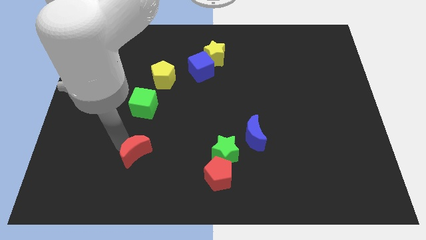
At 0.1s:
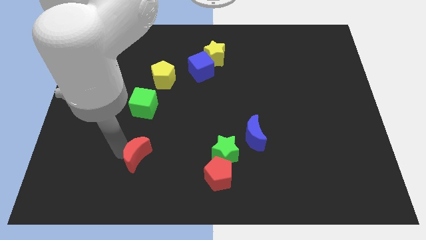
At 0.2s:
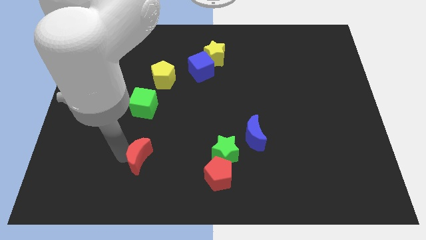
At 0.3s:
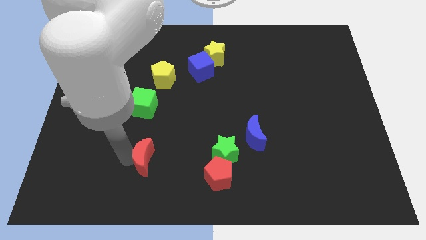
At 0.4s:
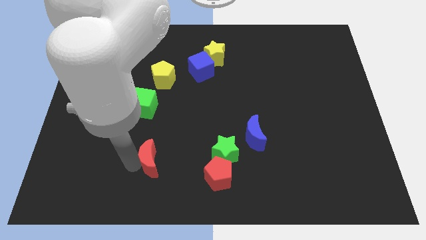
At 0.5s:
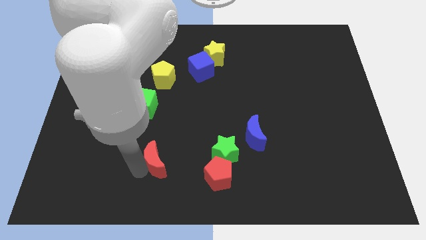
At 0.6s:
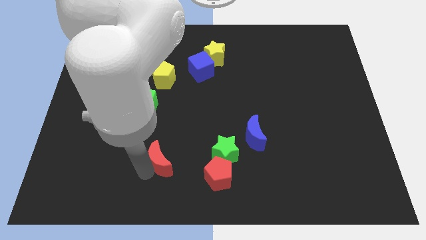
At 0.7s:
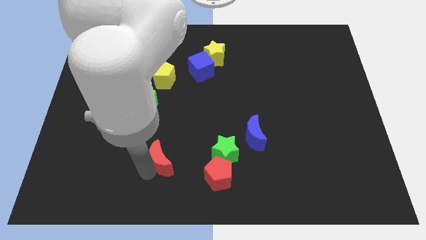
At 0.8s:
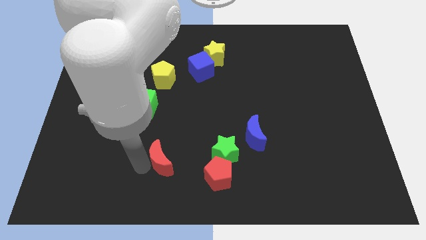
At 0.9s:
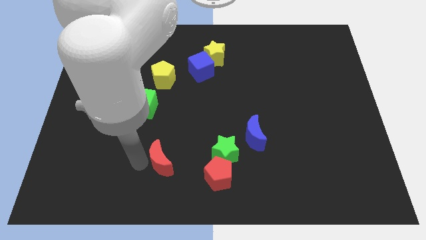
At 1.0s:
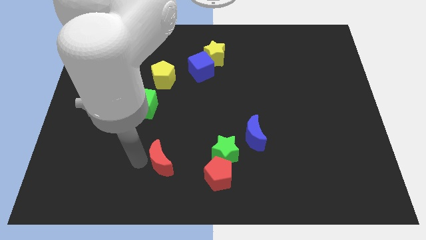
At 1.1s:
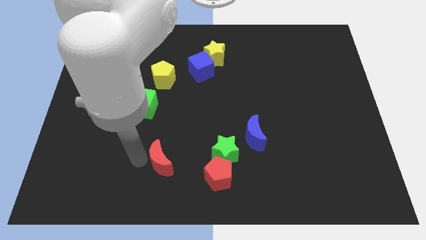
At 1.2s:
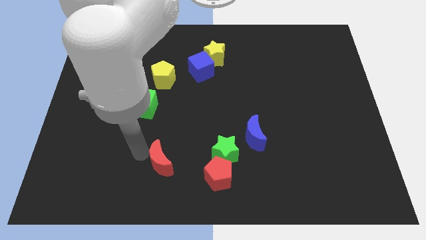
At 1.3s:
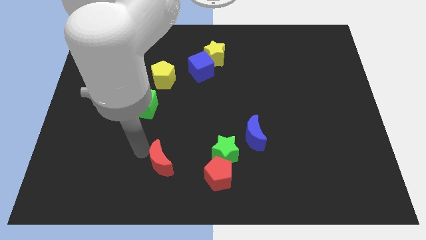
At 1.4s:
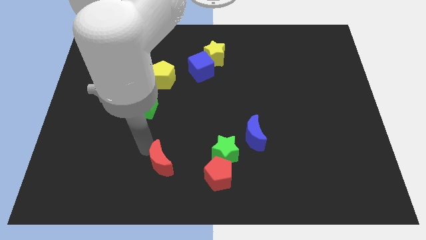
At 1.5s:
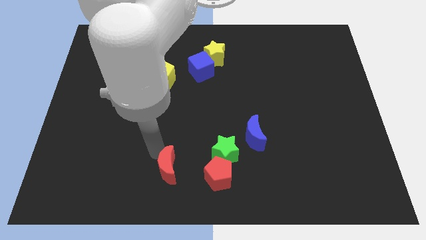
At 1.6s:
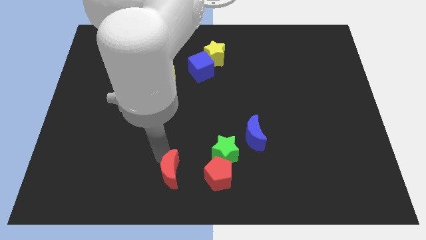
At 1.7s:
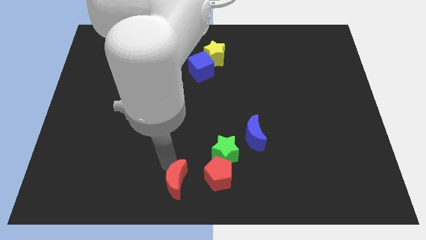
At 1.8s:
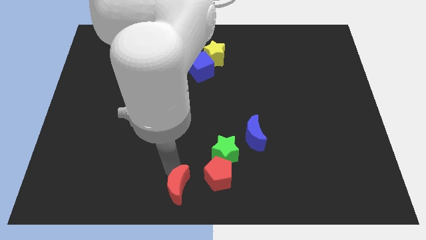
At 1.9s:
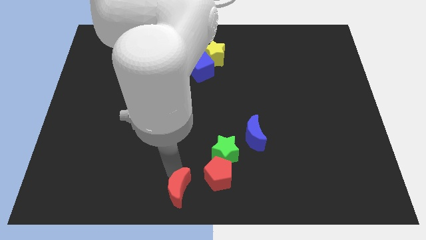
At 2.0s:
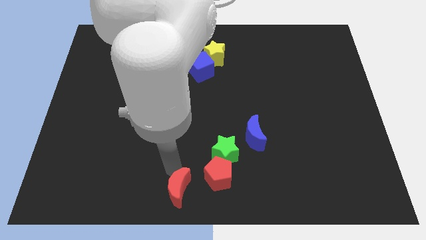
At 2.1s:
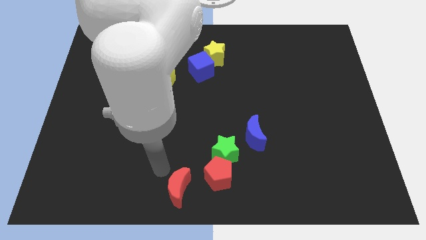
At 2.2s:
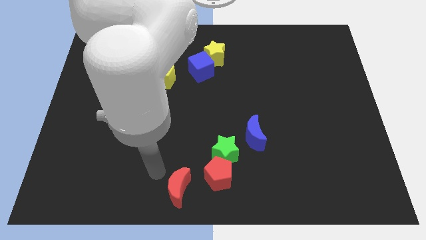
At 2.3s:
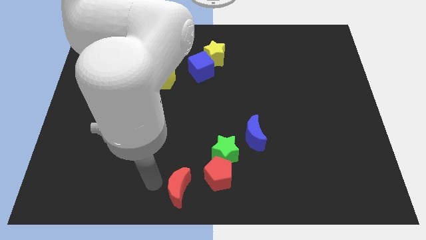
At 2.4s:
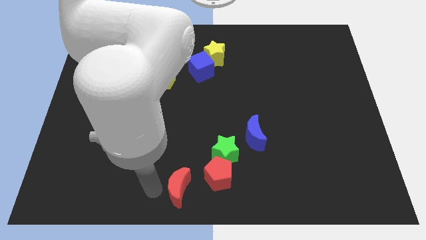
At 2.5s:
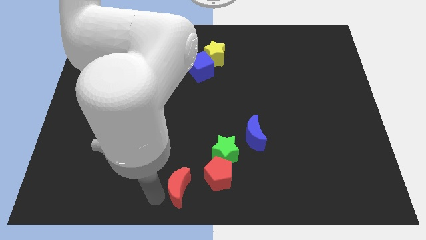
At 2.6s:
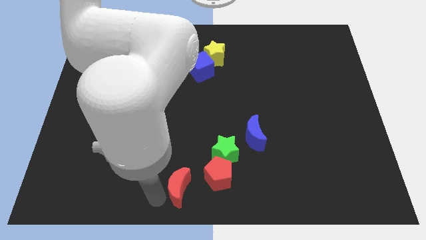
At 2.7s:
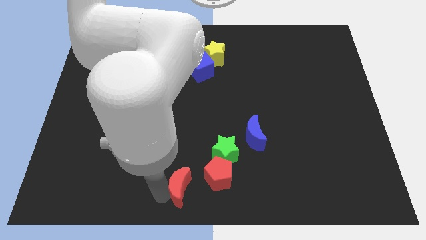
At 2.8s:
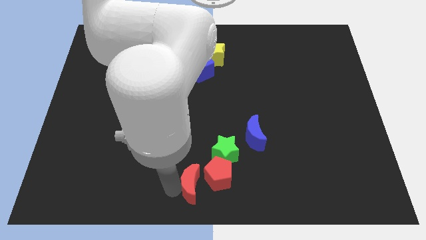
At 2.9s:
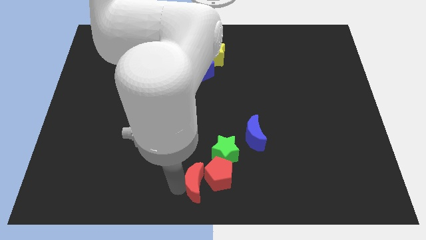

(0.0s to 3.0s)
move the red crescent to the left side of the red pentagon

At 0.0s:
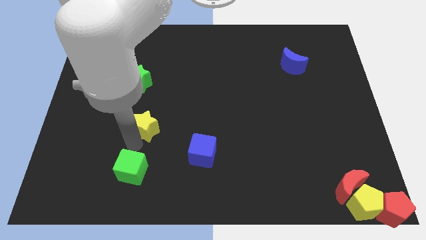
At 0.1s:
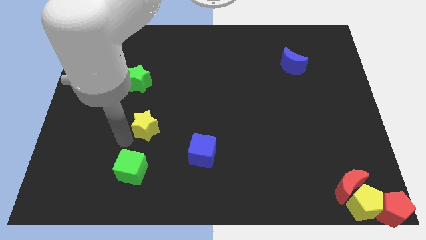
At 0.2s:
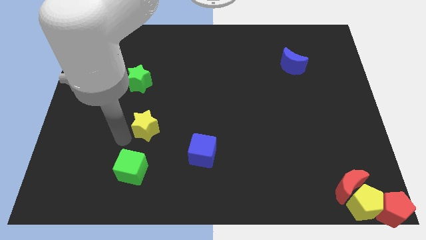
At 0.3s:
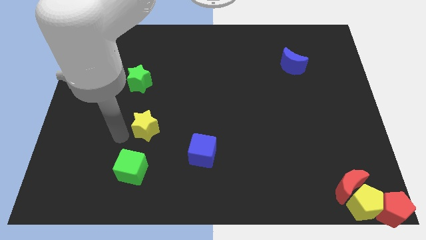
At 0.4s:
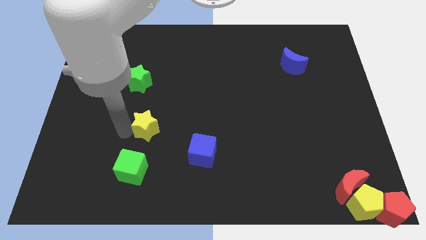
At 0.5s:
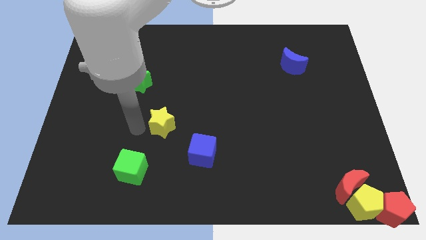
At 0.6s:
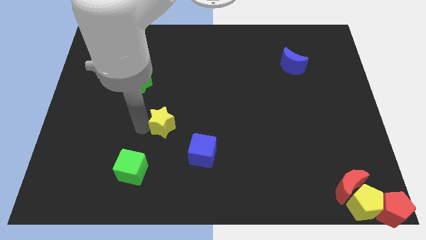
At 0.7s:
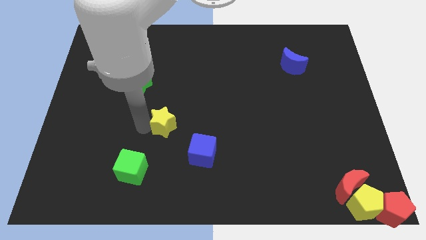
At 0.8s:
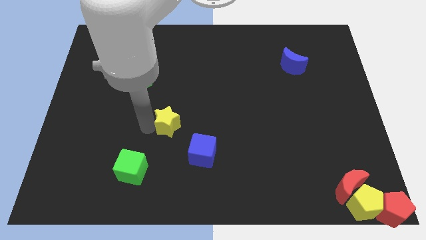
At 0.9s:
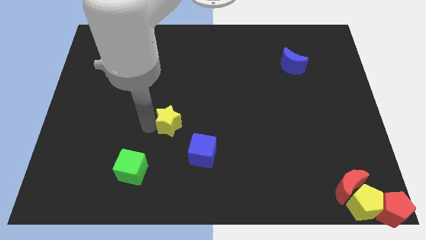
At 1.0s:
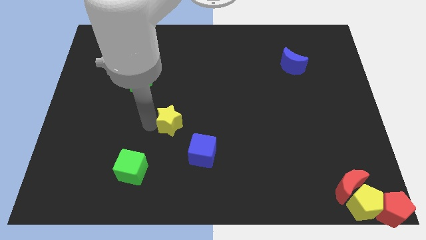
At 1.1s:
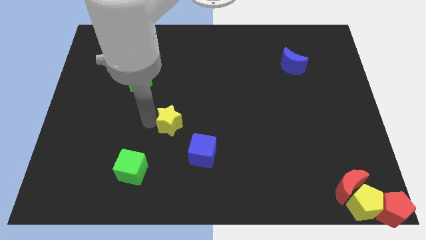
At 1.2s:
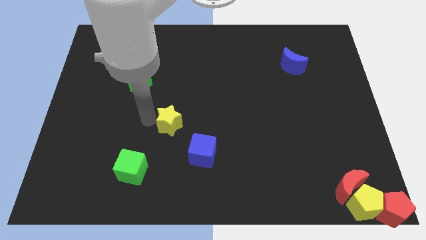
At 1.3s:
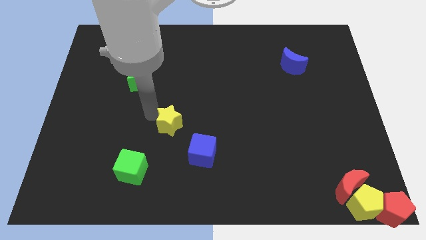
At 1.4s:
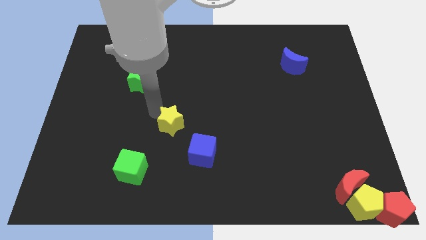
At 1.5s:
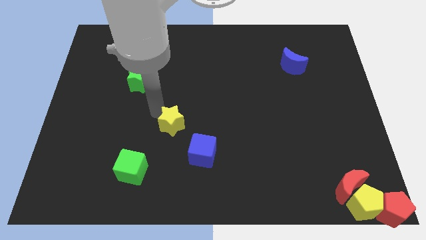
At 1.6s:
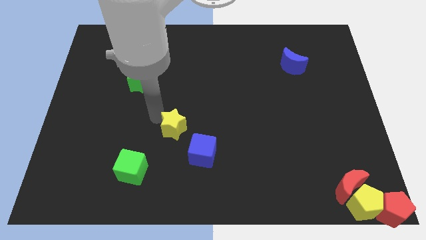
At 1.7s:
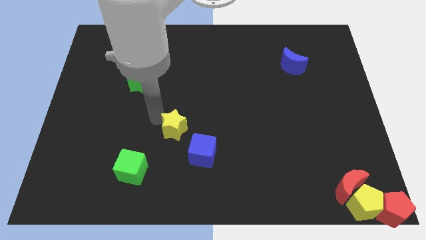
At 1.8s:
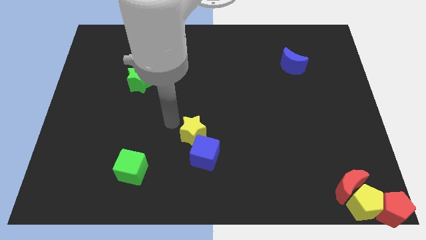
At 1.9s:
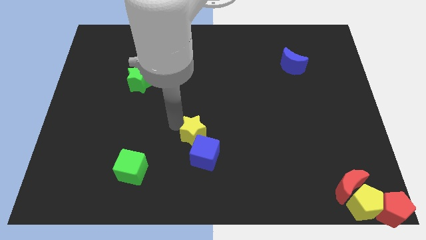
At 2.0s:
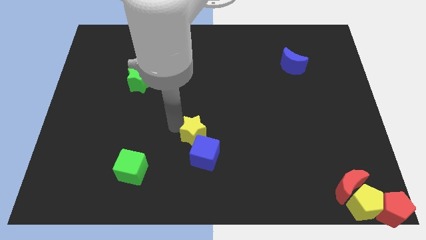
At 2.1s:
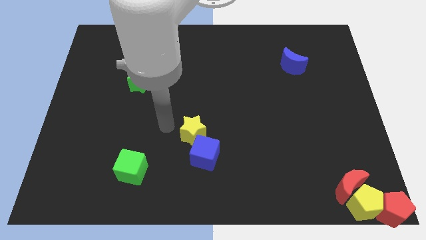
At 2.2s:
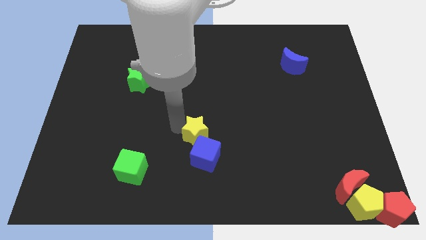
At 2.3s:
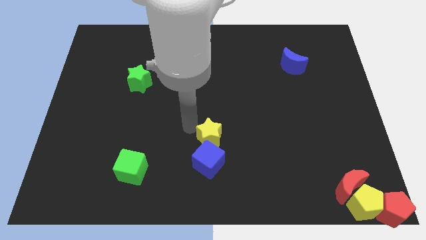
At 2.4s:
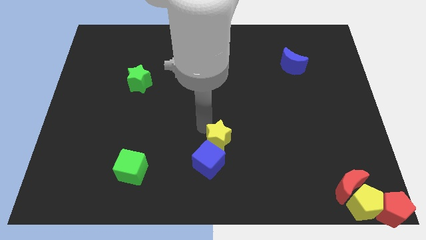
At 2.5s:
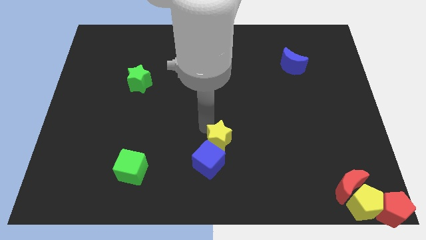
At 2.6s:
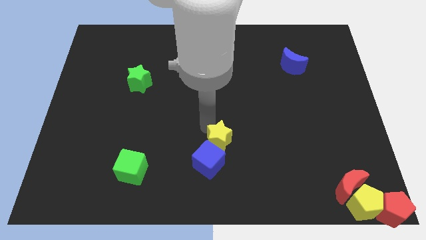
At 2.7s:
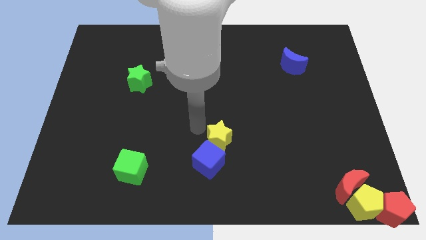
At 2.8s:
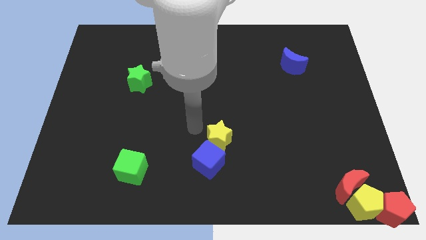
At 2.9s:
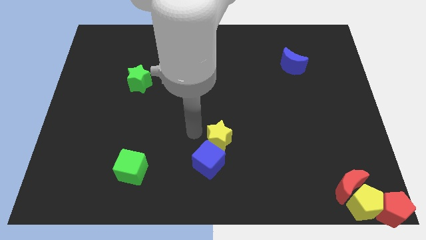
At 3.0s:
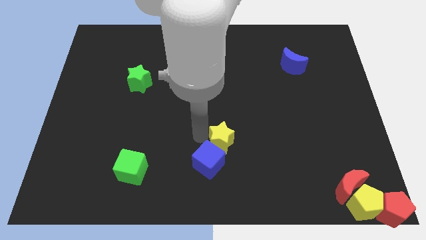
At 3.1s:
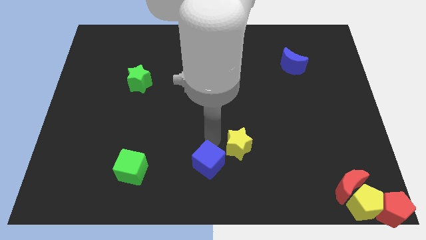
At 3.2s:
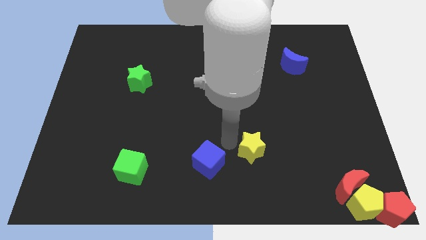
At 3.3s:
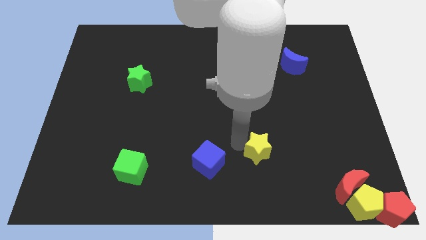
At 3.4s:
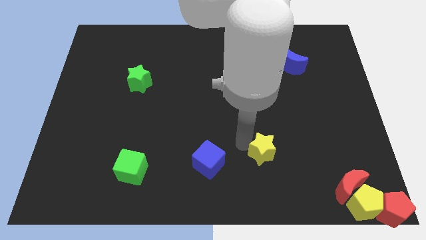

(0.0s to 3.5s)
move the yellow star to the right of the blue cube

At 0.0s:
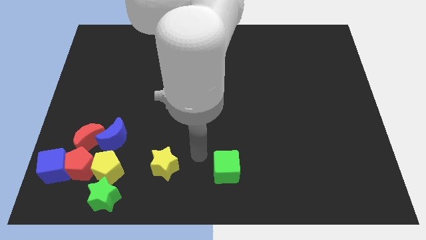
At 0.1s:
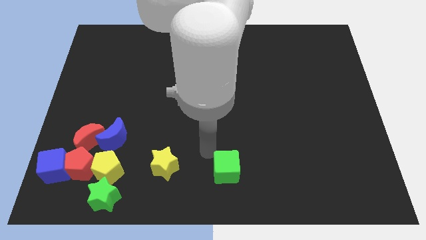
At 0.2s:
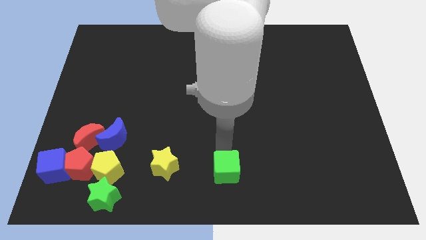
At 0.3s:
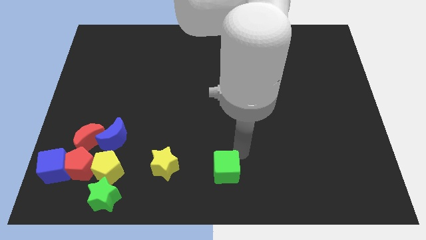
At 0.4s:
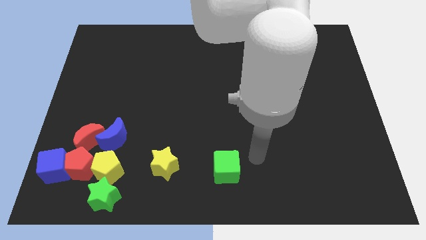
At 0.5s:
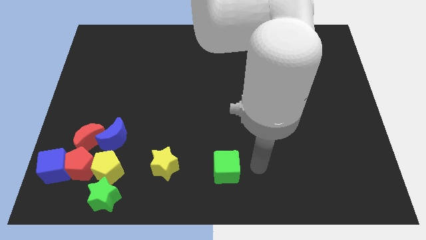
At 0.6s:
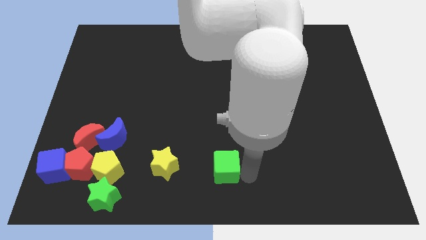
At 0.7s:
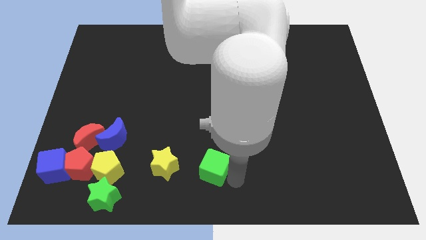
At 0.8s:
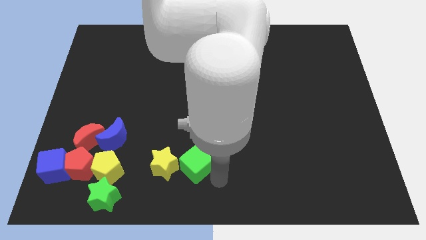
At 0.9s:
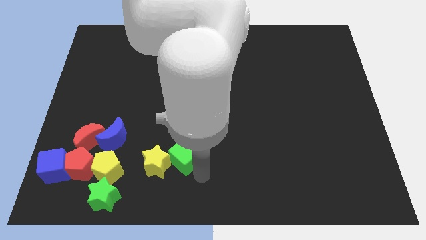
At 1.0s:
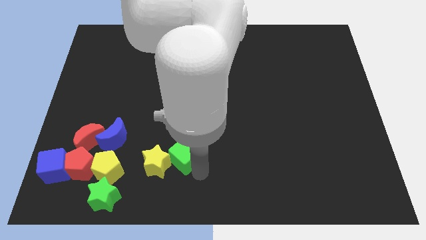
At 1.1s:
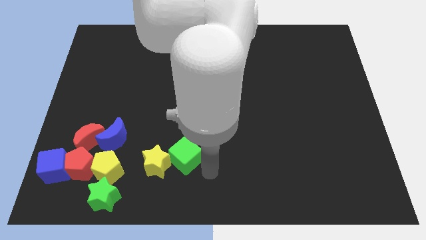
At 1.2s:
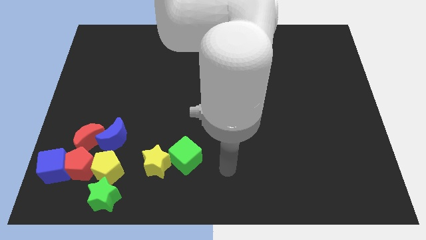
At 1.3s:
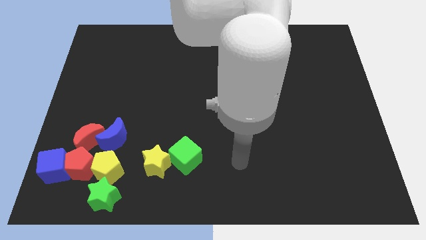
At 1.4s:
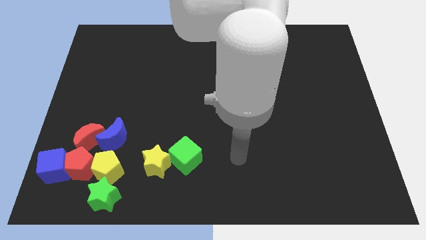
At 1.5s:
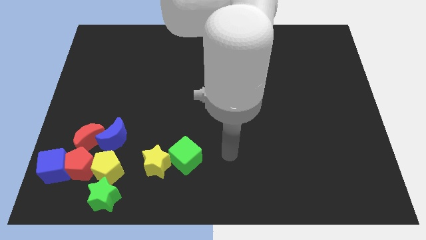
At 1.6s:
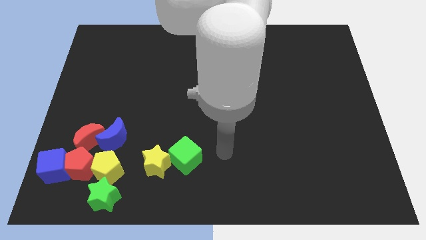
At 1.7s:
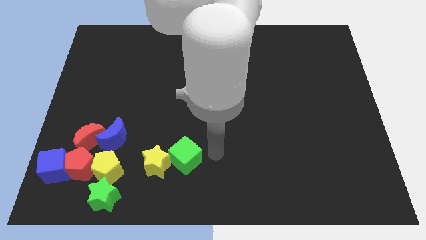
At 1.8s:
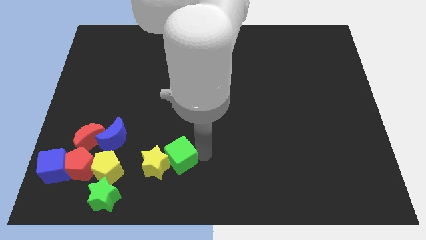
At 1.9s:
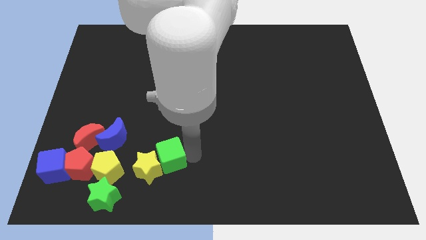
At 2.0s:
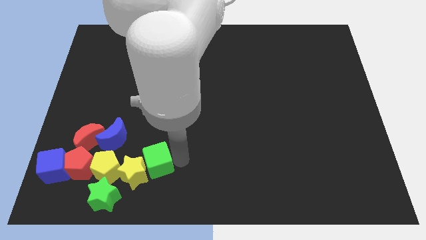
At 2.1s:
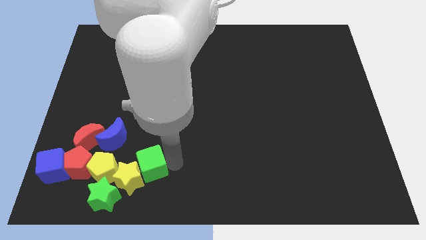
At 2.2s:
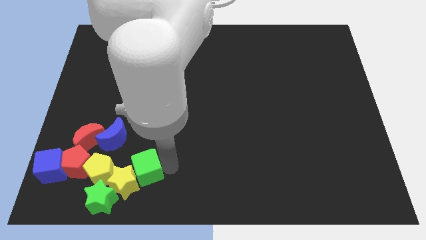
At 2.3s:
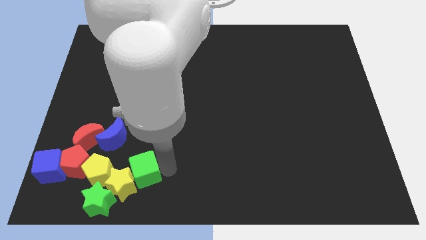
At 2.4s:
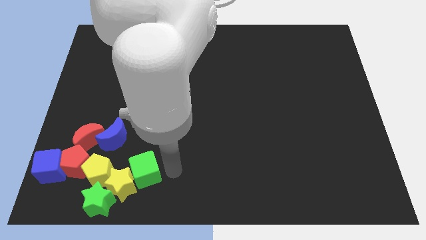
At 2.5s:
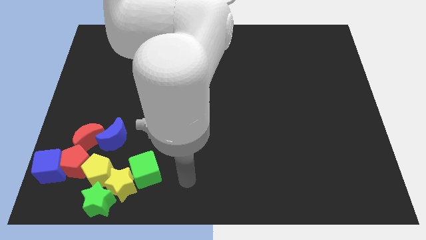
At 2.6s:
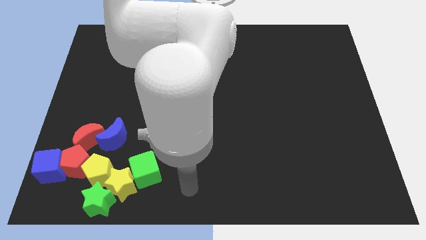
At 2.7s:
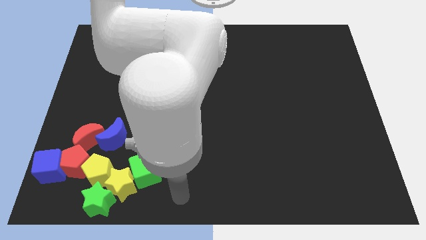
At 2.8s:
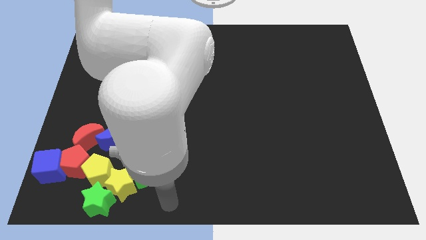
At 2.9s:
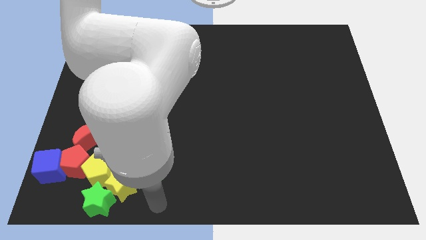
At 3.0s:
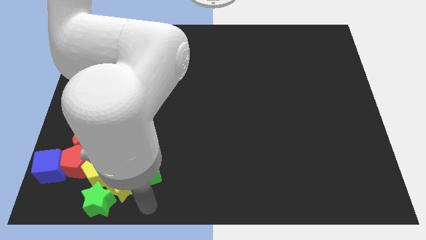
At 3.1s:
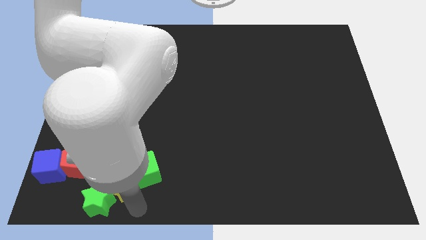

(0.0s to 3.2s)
push the green cube into the yellow star
